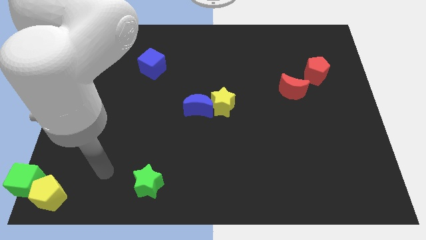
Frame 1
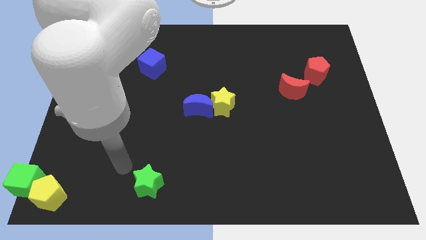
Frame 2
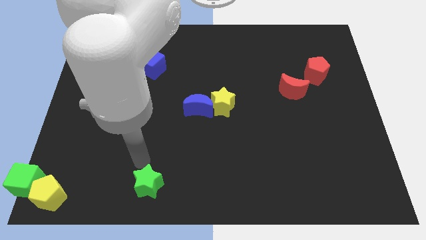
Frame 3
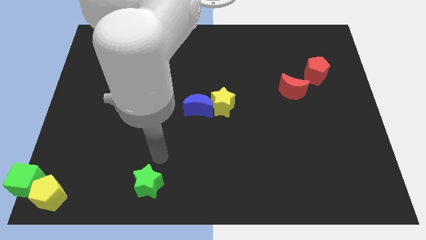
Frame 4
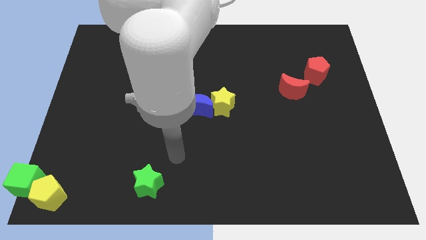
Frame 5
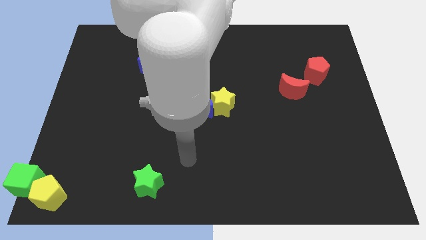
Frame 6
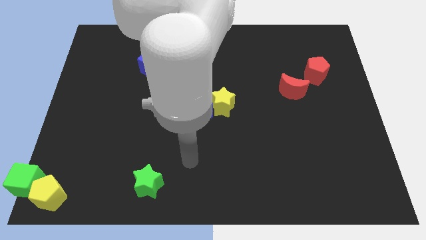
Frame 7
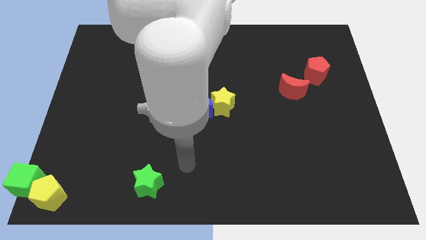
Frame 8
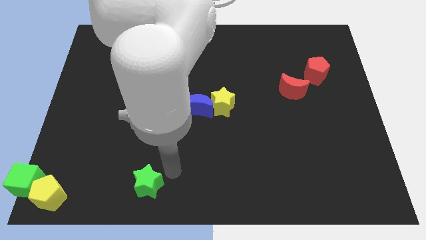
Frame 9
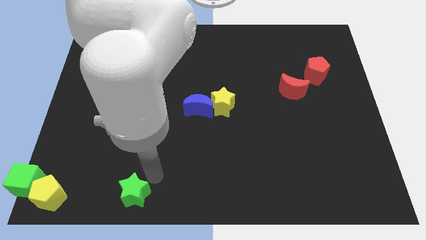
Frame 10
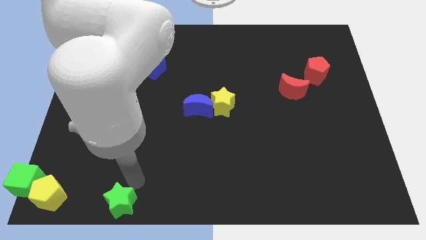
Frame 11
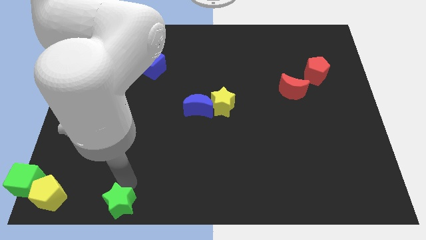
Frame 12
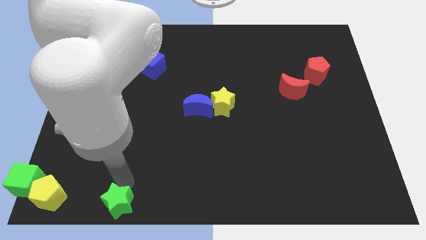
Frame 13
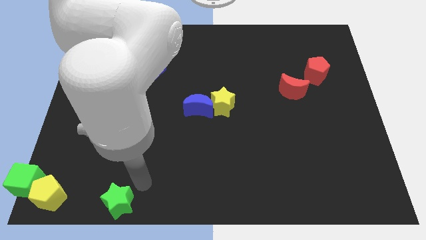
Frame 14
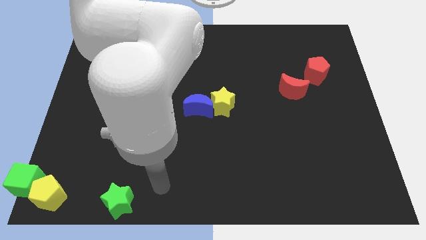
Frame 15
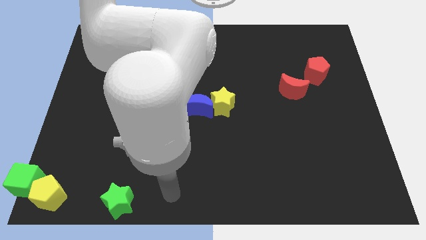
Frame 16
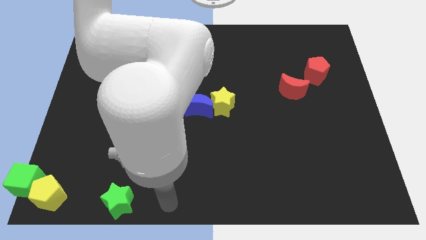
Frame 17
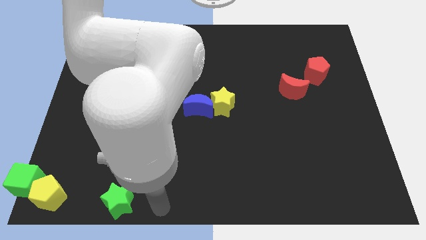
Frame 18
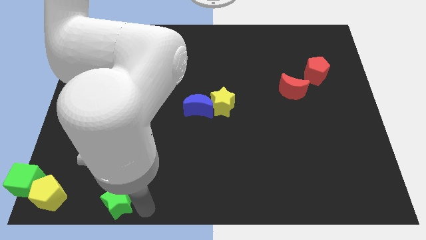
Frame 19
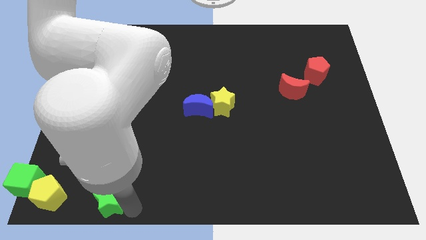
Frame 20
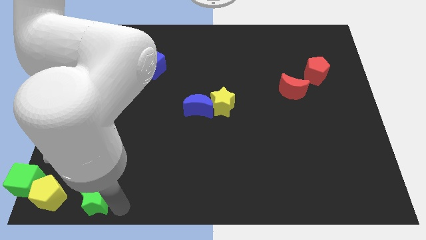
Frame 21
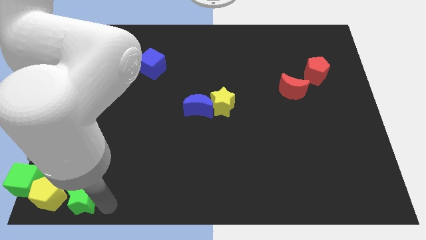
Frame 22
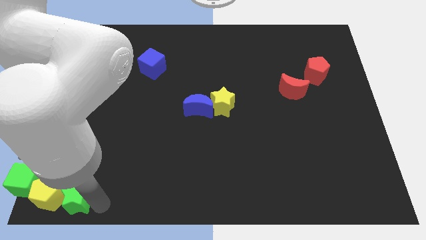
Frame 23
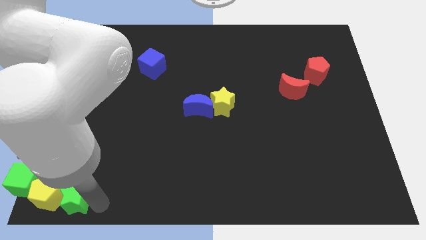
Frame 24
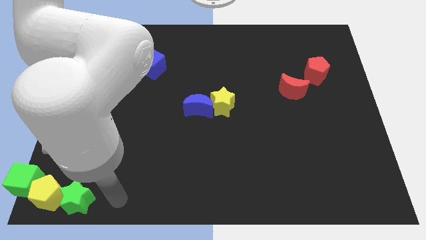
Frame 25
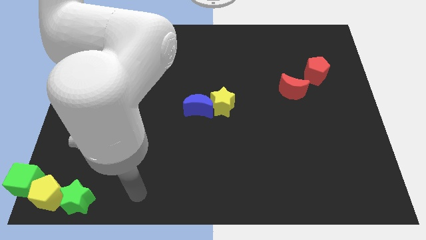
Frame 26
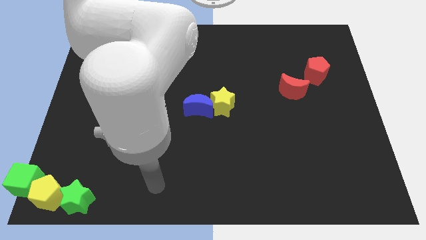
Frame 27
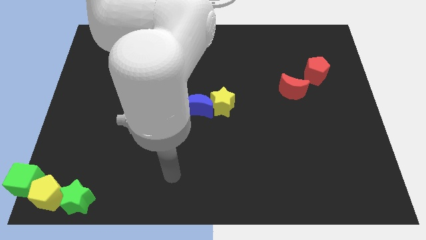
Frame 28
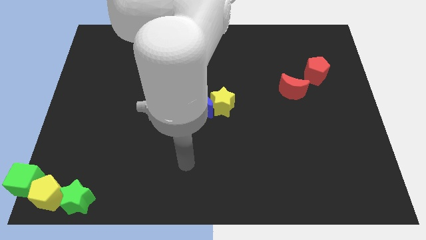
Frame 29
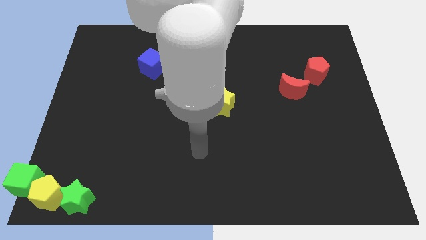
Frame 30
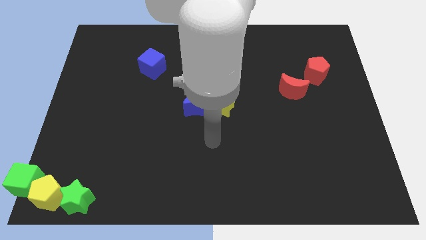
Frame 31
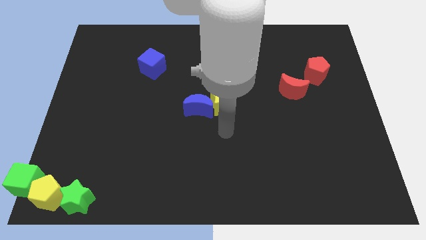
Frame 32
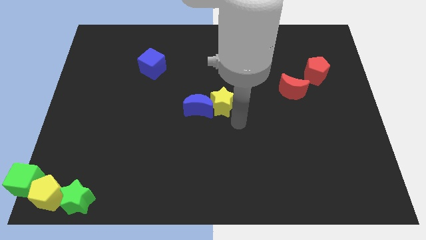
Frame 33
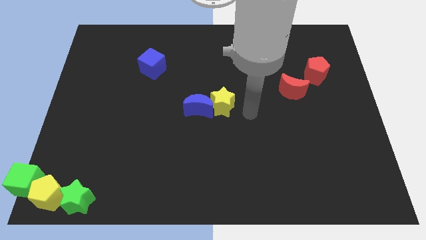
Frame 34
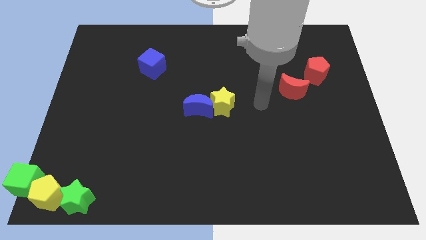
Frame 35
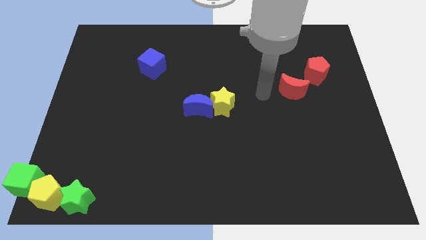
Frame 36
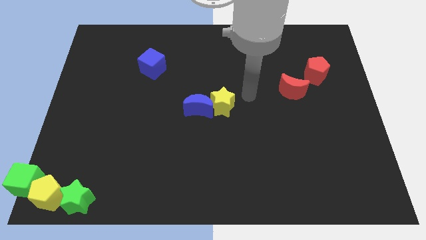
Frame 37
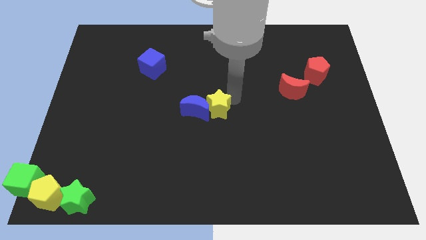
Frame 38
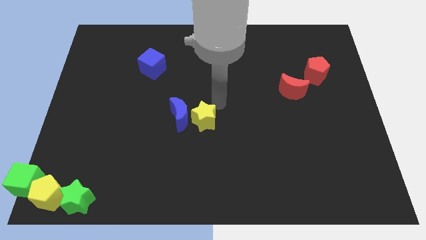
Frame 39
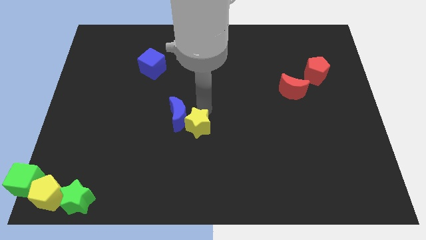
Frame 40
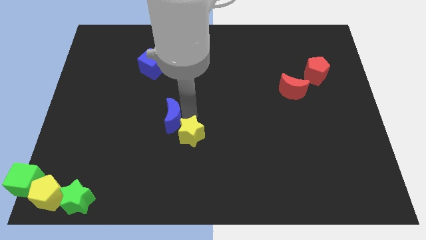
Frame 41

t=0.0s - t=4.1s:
place the green star into yellow pentagon

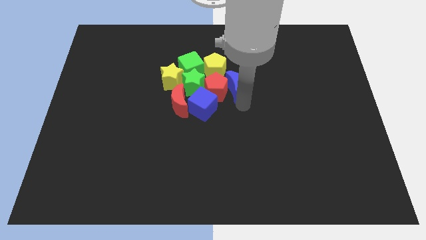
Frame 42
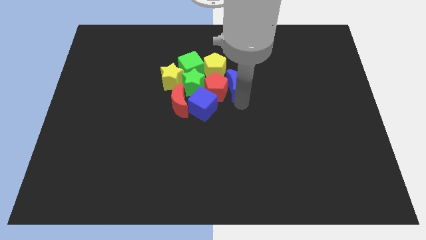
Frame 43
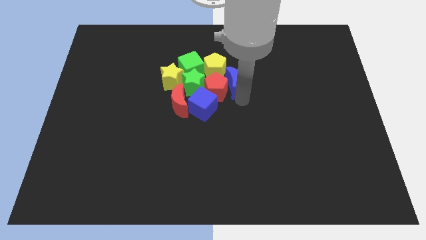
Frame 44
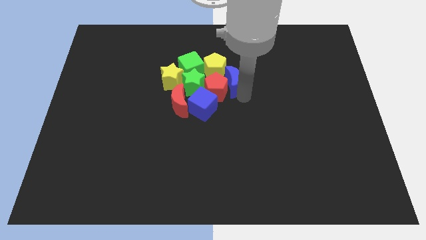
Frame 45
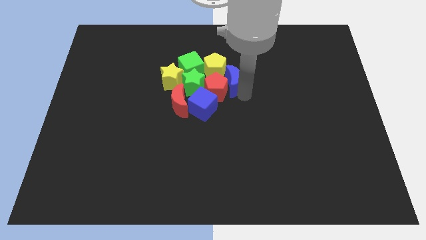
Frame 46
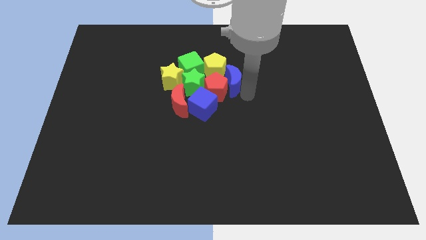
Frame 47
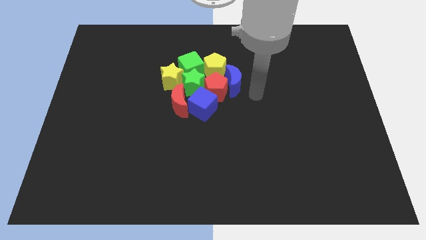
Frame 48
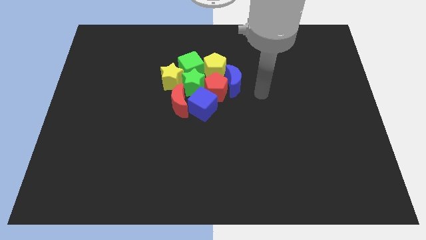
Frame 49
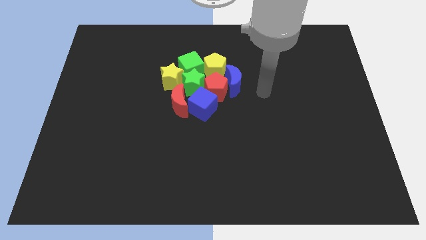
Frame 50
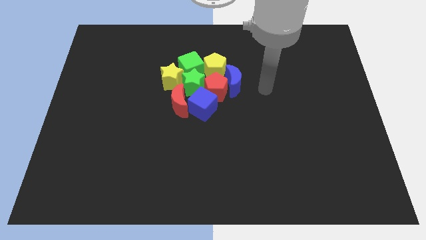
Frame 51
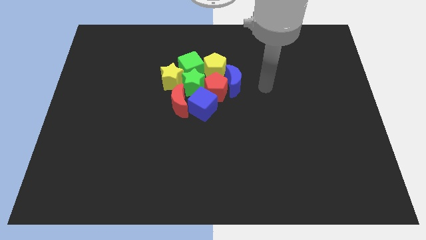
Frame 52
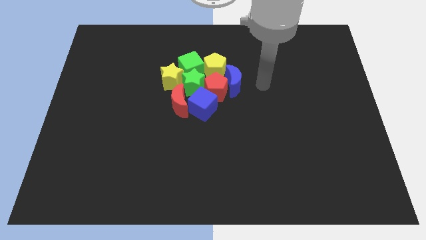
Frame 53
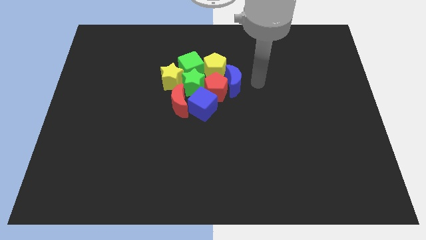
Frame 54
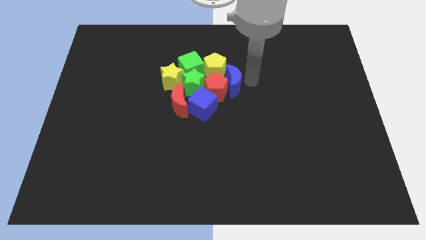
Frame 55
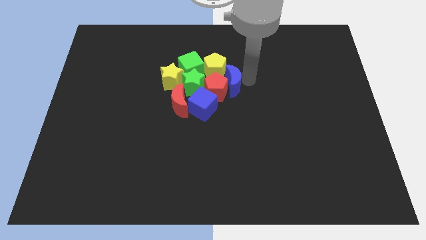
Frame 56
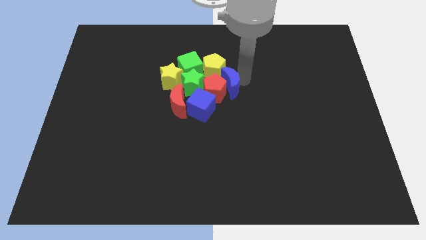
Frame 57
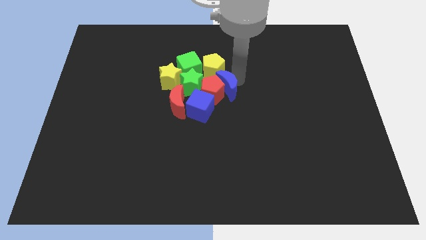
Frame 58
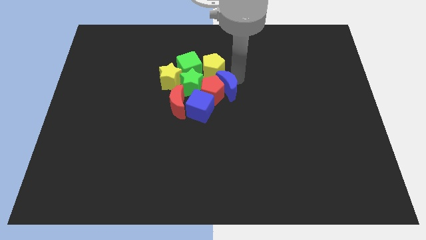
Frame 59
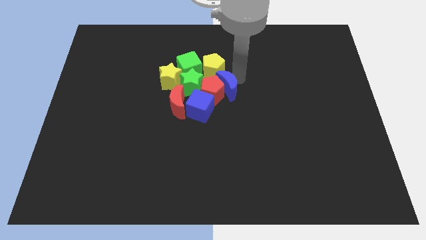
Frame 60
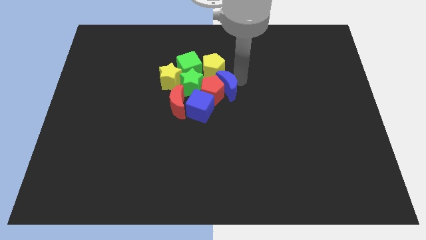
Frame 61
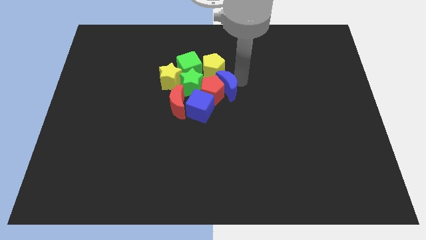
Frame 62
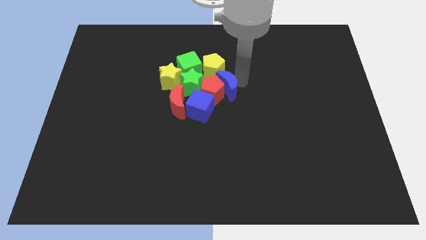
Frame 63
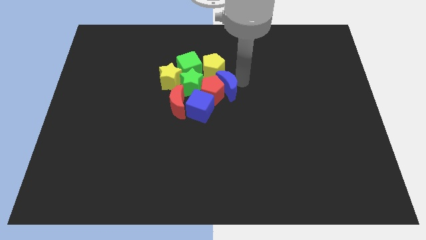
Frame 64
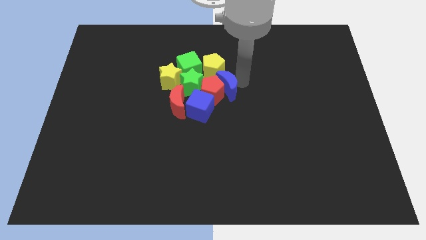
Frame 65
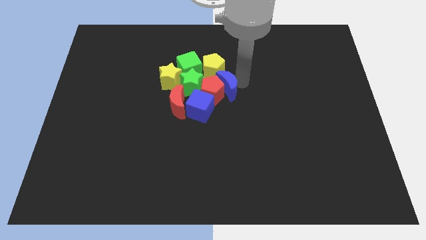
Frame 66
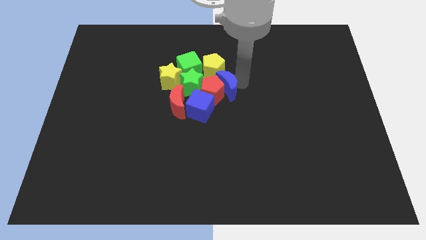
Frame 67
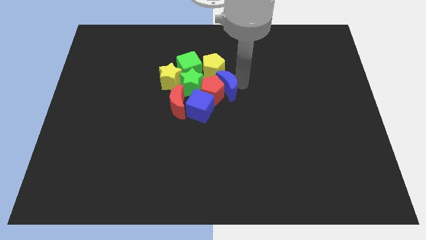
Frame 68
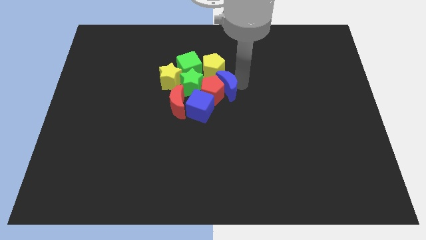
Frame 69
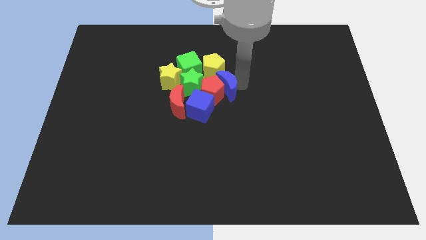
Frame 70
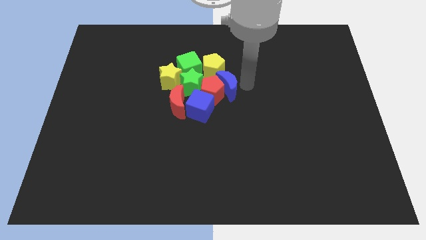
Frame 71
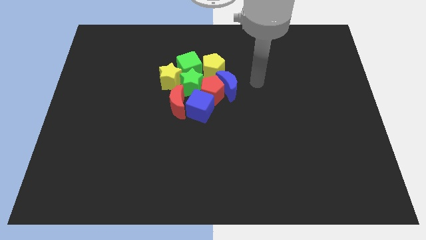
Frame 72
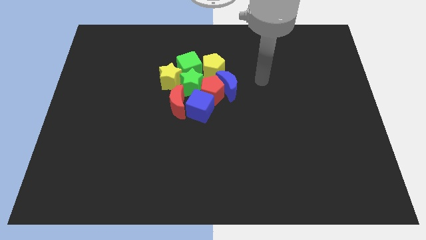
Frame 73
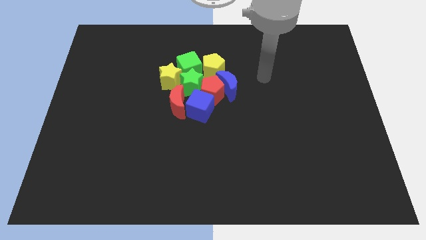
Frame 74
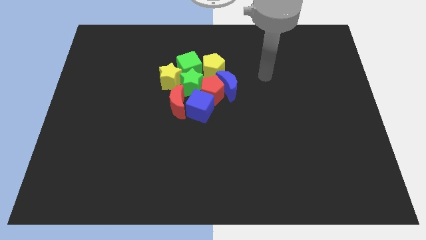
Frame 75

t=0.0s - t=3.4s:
place blue moon to the right of red pentagon

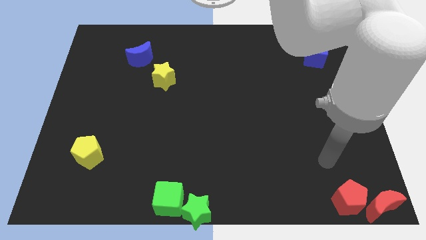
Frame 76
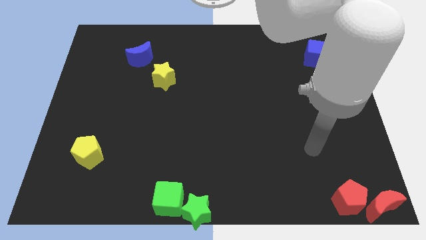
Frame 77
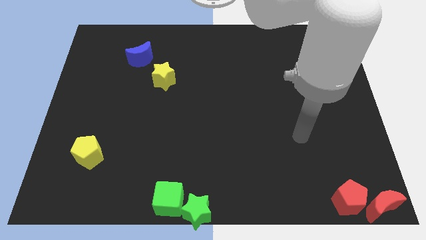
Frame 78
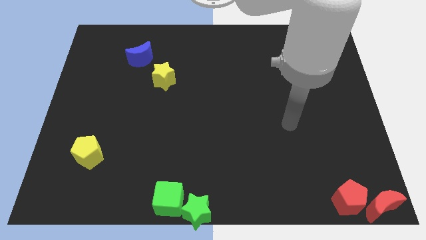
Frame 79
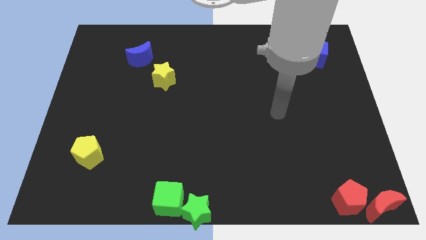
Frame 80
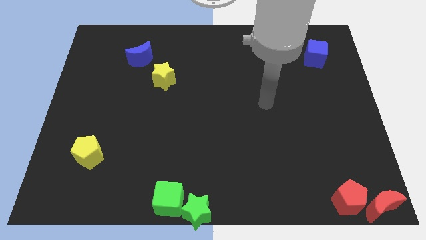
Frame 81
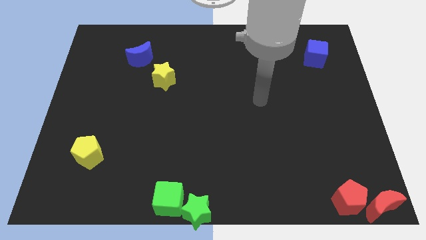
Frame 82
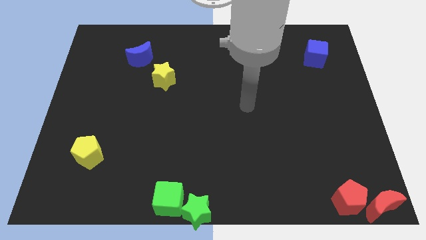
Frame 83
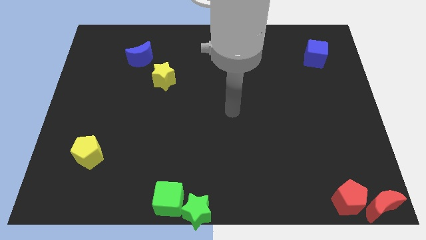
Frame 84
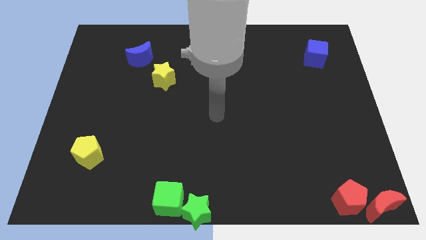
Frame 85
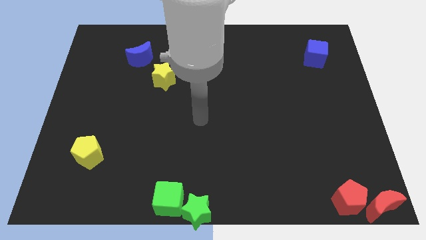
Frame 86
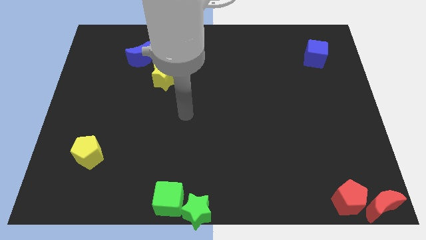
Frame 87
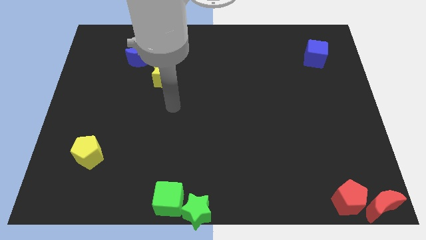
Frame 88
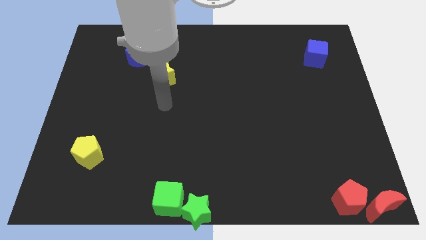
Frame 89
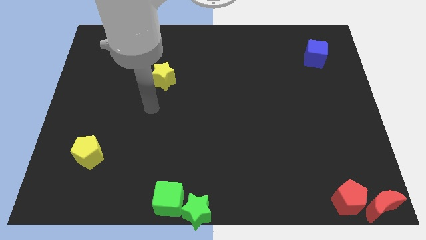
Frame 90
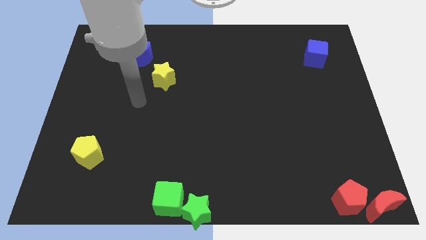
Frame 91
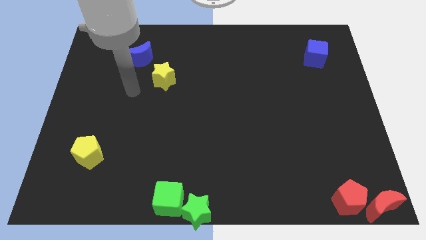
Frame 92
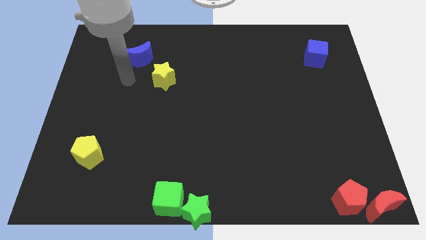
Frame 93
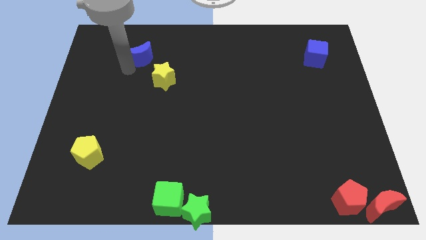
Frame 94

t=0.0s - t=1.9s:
drag your arm away from the red blocks
